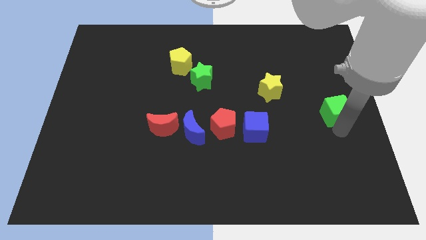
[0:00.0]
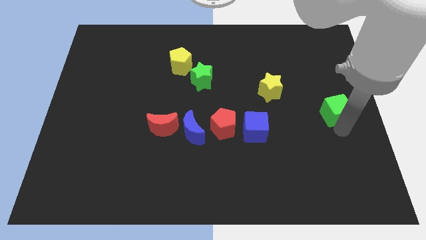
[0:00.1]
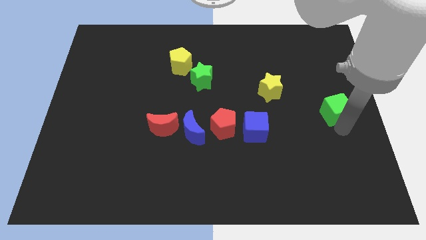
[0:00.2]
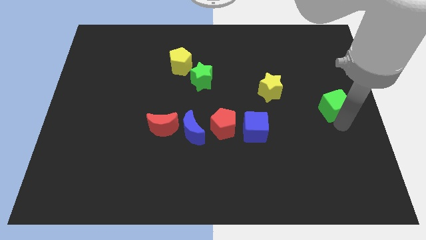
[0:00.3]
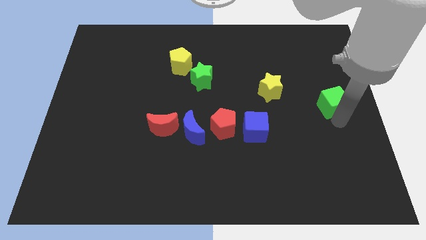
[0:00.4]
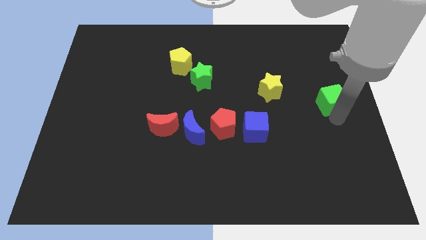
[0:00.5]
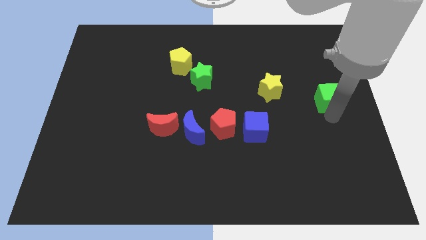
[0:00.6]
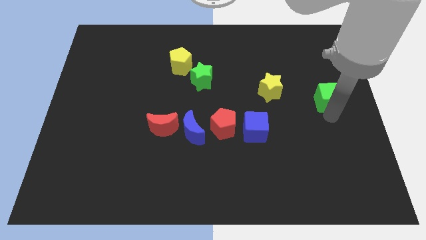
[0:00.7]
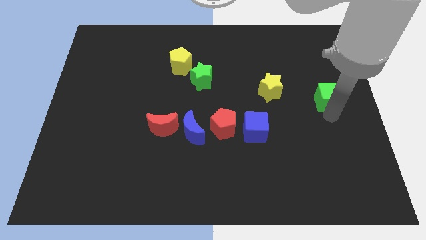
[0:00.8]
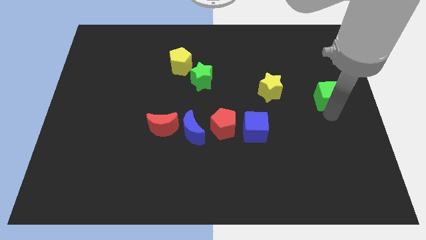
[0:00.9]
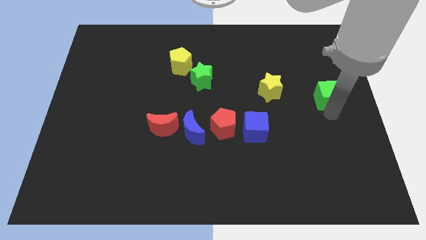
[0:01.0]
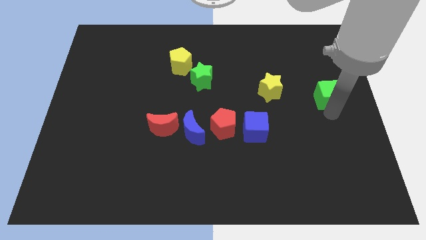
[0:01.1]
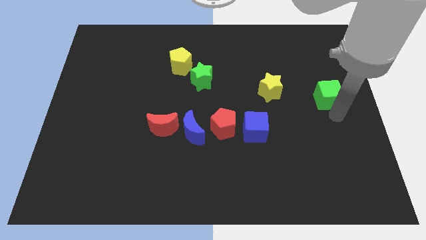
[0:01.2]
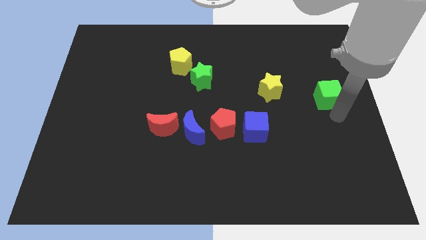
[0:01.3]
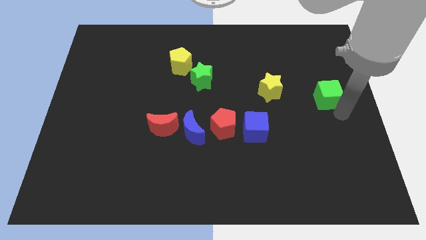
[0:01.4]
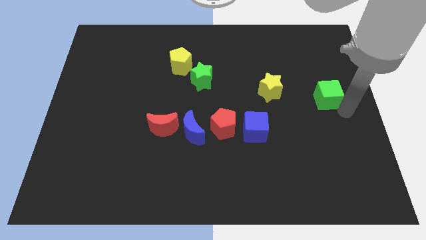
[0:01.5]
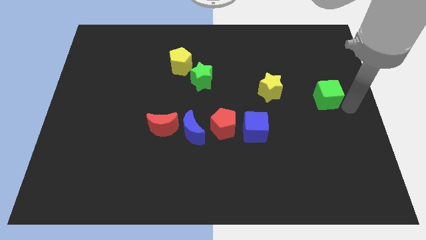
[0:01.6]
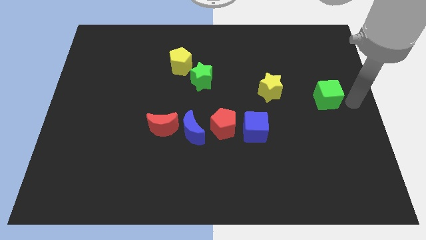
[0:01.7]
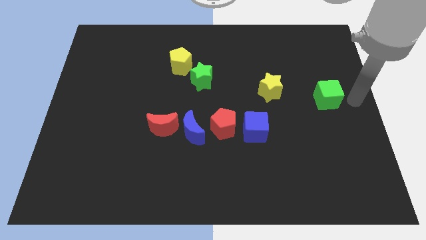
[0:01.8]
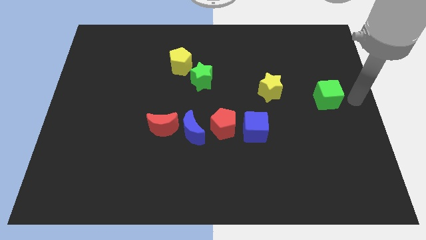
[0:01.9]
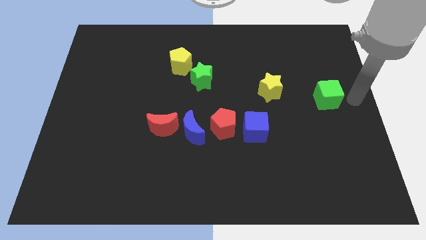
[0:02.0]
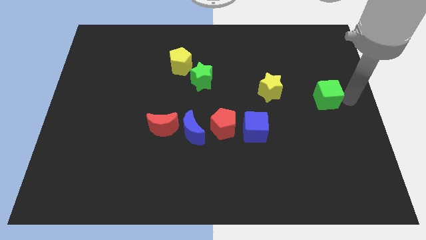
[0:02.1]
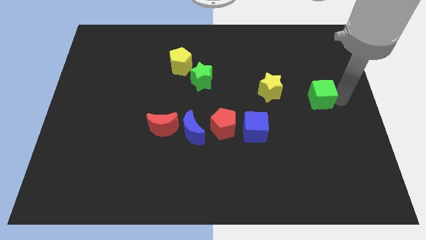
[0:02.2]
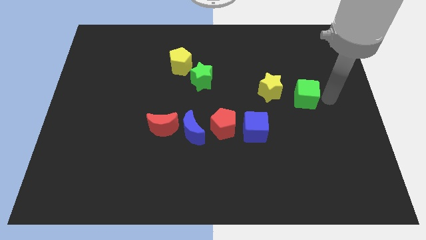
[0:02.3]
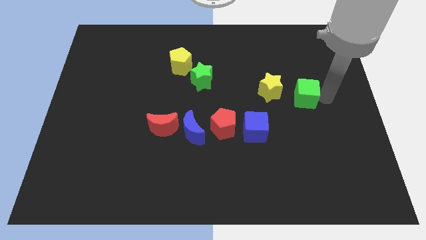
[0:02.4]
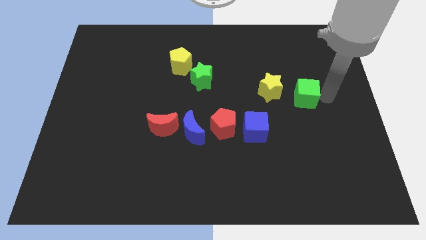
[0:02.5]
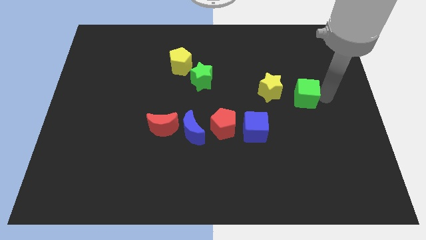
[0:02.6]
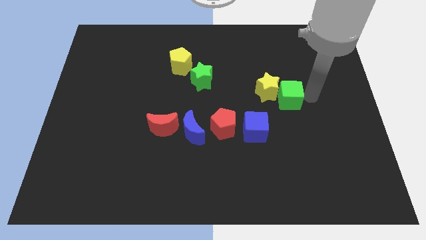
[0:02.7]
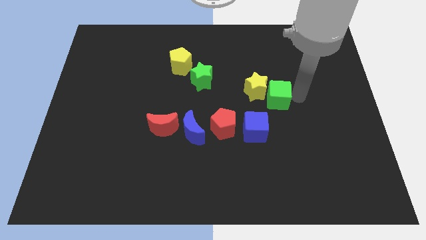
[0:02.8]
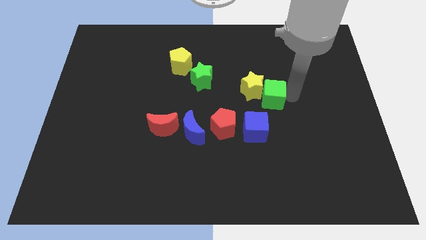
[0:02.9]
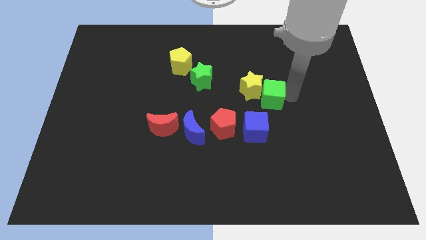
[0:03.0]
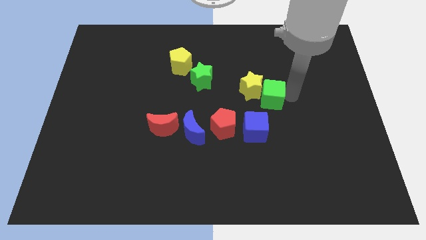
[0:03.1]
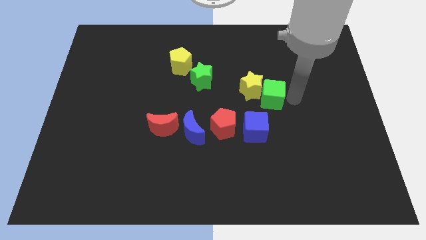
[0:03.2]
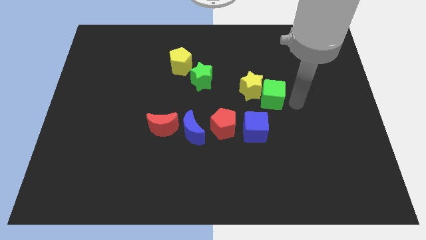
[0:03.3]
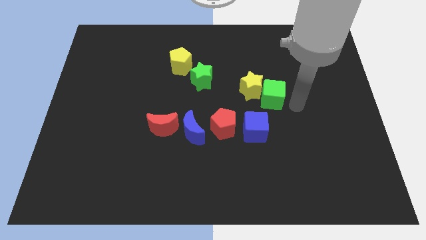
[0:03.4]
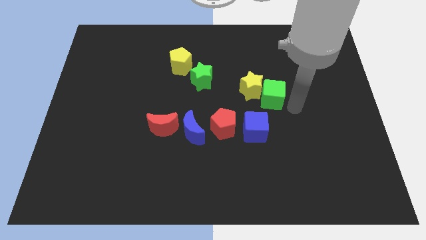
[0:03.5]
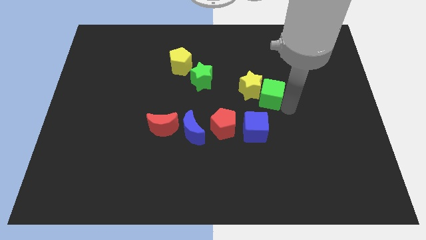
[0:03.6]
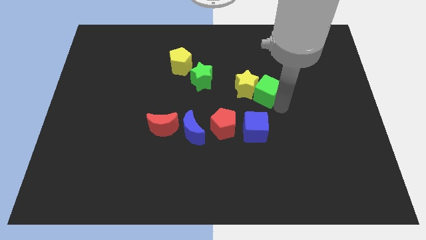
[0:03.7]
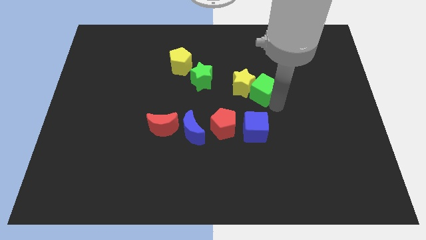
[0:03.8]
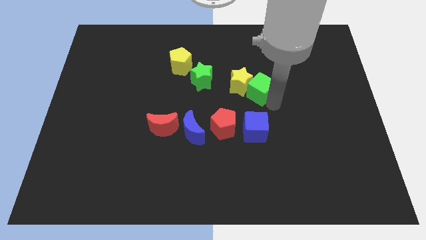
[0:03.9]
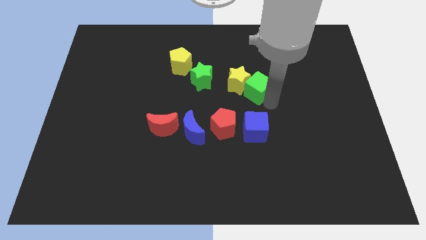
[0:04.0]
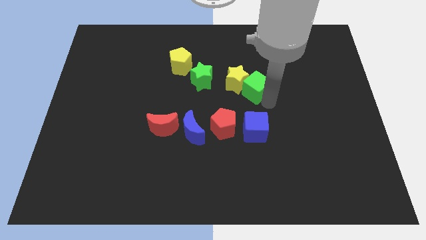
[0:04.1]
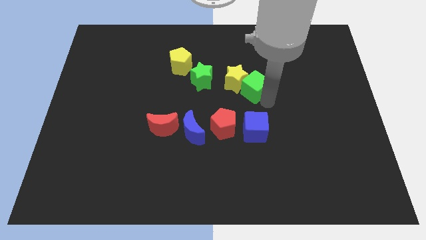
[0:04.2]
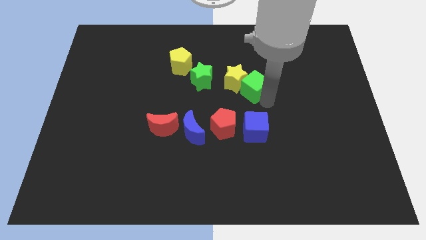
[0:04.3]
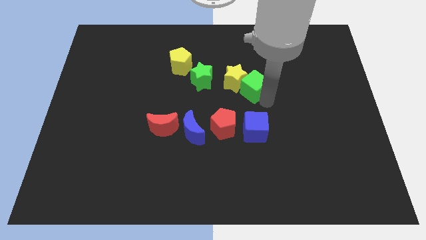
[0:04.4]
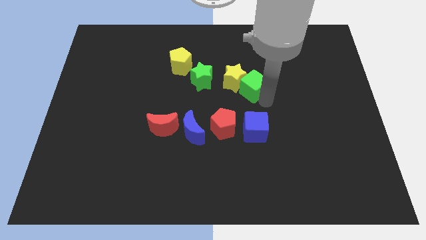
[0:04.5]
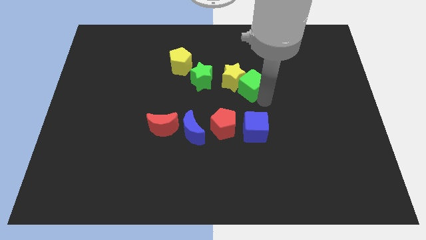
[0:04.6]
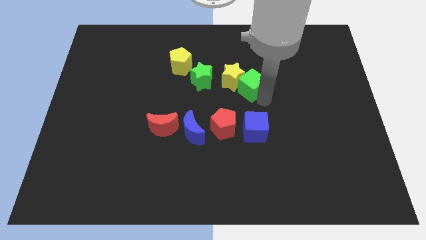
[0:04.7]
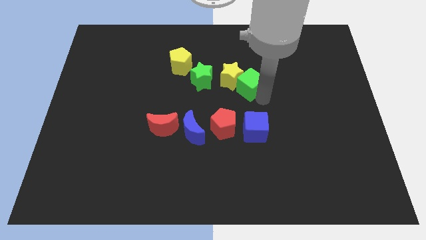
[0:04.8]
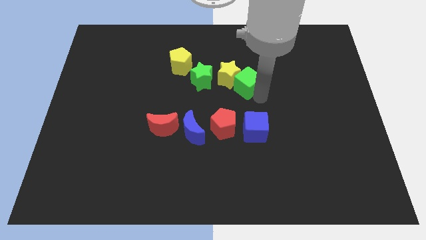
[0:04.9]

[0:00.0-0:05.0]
push yellow star and green cube to the right side of the green star

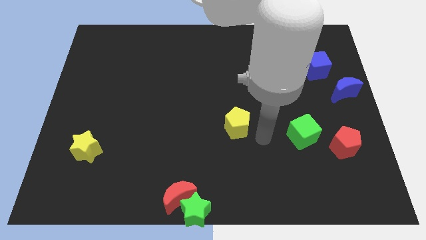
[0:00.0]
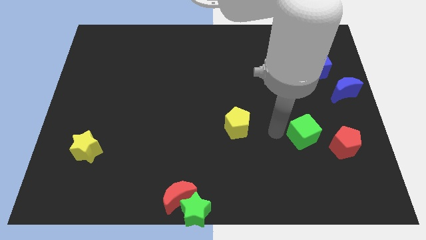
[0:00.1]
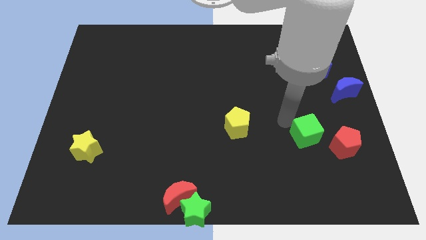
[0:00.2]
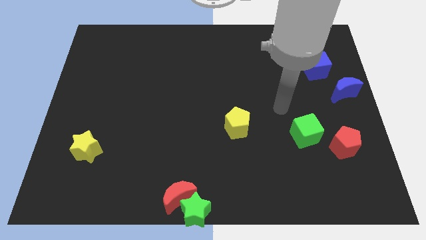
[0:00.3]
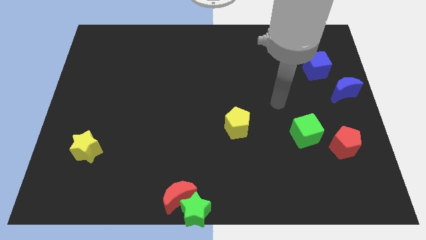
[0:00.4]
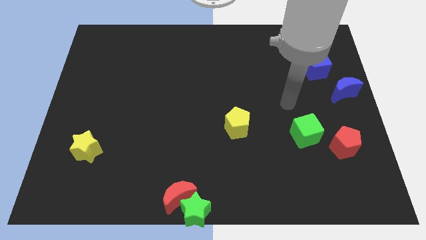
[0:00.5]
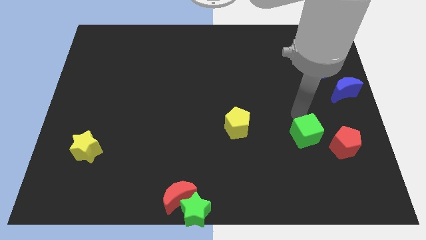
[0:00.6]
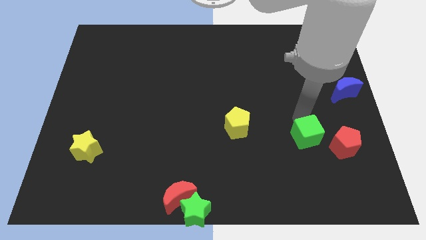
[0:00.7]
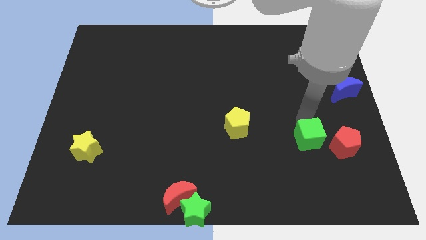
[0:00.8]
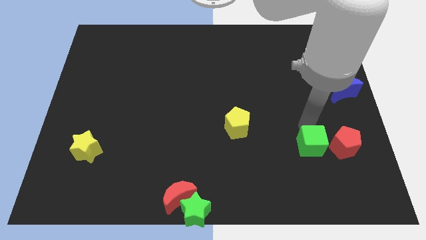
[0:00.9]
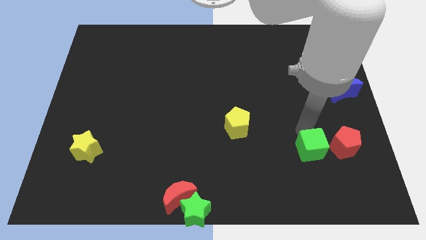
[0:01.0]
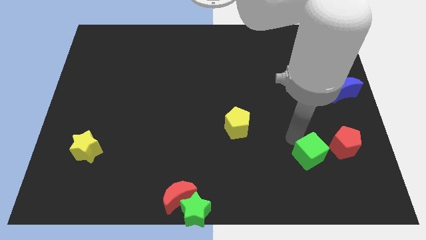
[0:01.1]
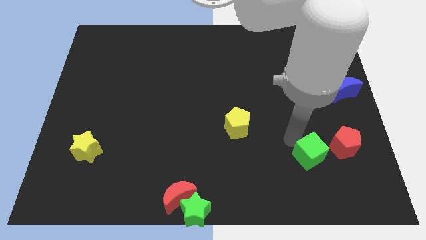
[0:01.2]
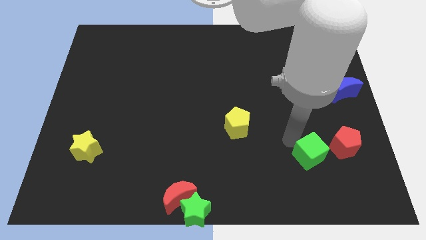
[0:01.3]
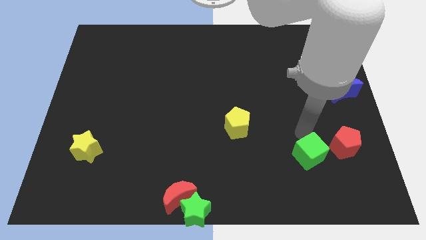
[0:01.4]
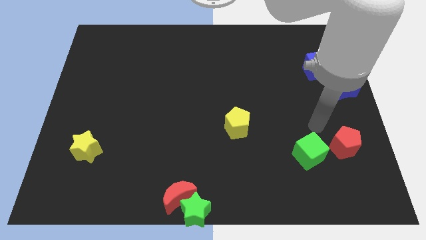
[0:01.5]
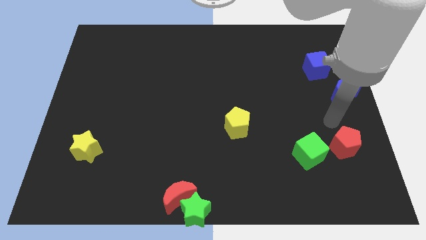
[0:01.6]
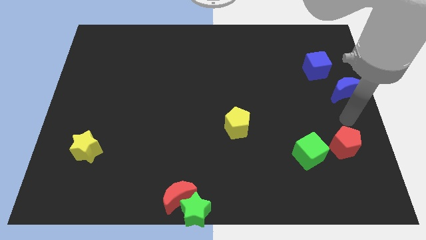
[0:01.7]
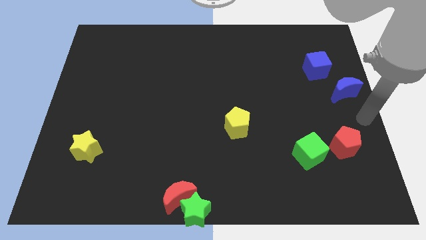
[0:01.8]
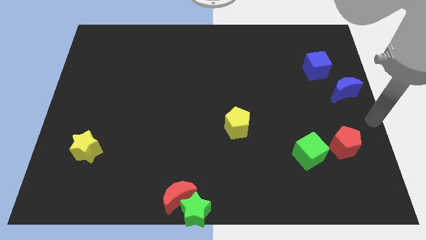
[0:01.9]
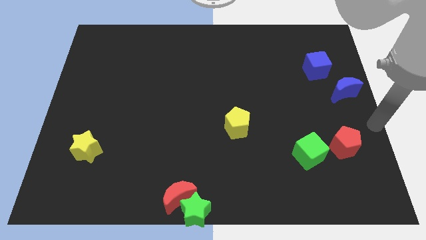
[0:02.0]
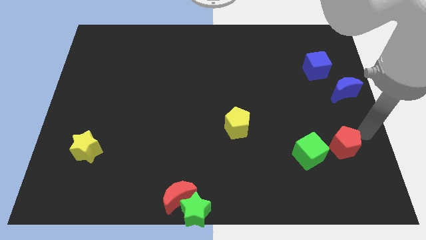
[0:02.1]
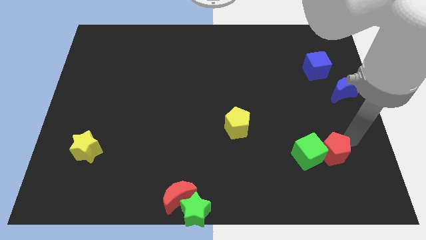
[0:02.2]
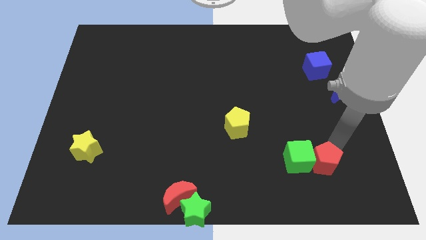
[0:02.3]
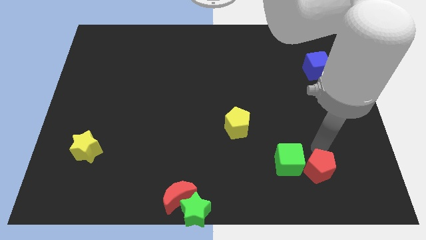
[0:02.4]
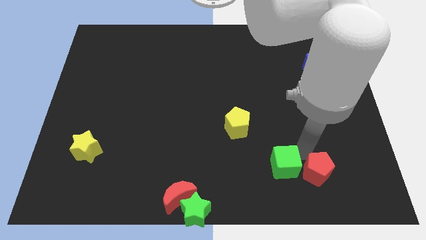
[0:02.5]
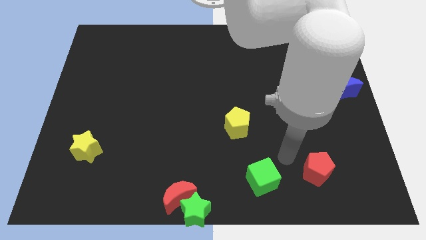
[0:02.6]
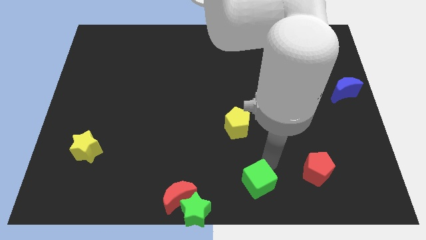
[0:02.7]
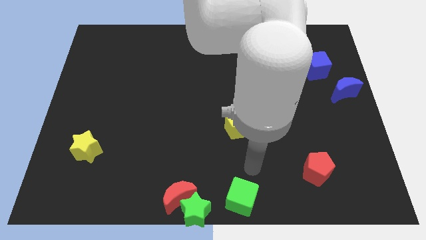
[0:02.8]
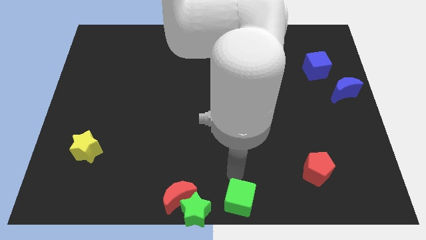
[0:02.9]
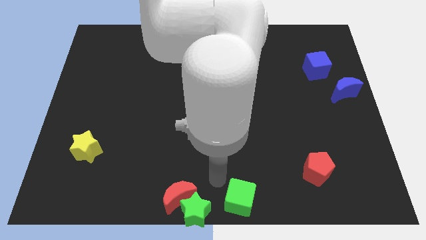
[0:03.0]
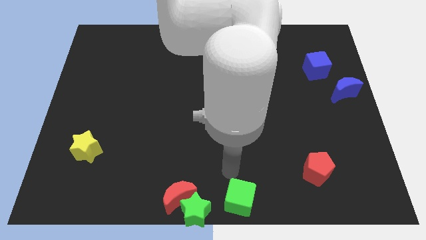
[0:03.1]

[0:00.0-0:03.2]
push the red pentagon into the green cube

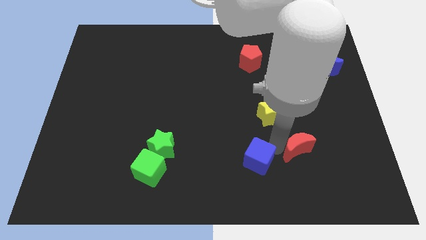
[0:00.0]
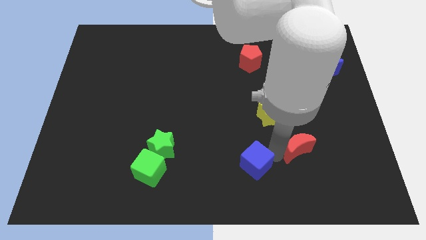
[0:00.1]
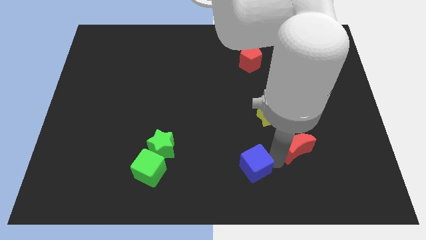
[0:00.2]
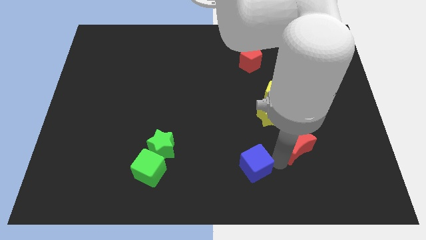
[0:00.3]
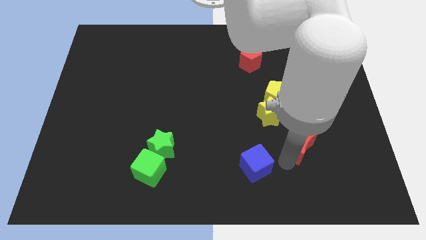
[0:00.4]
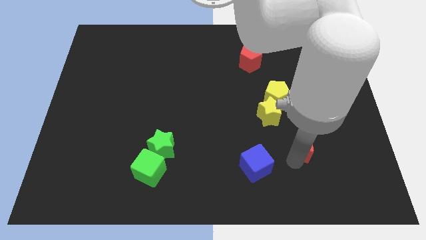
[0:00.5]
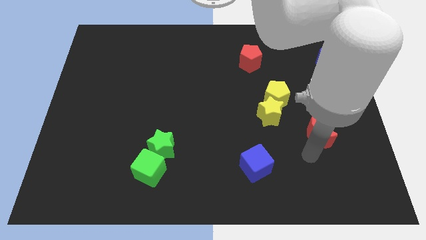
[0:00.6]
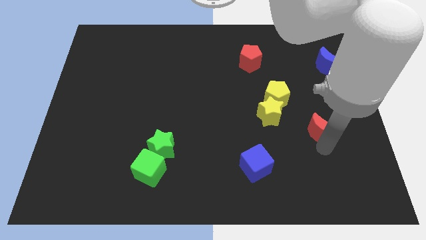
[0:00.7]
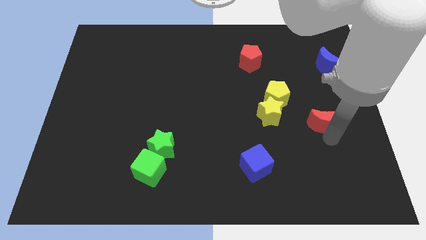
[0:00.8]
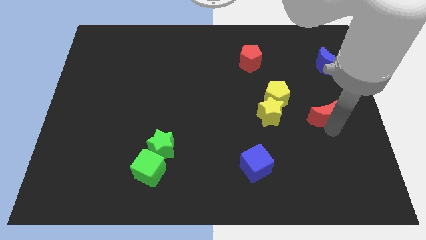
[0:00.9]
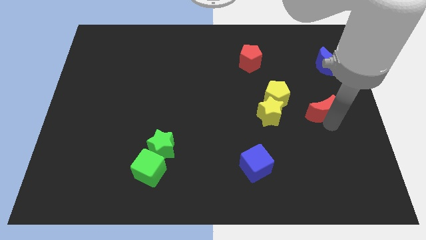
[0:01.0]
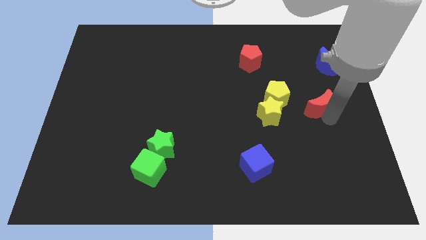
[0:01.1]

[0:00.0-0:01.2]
place the red moon to the right of the yellow star
